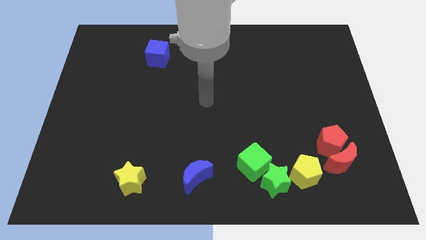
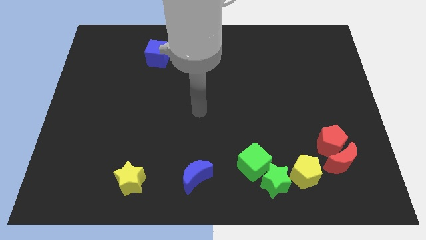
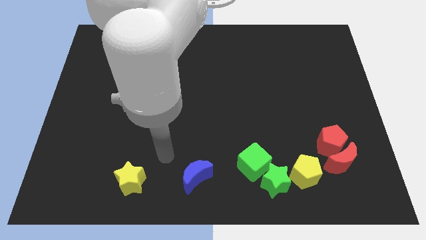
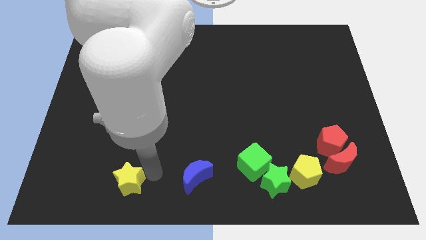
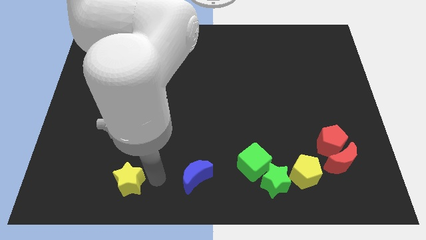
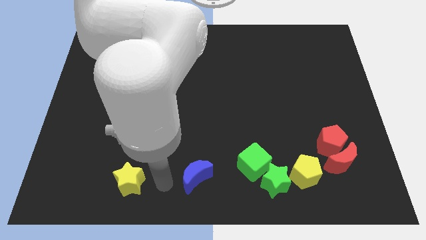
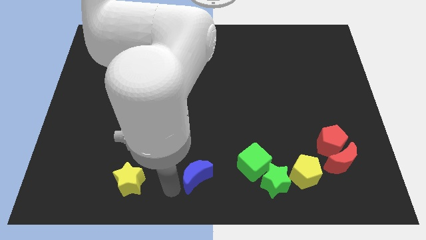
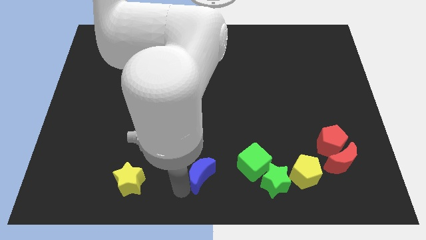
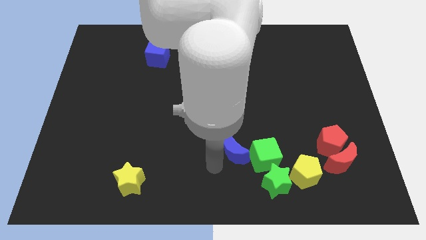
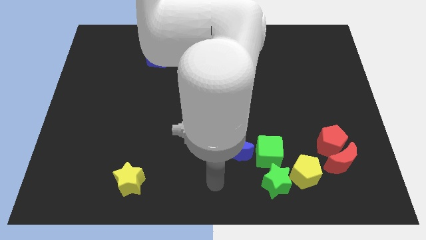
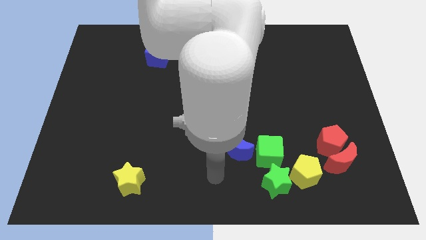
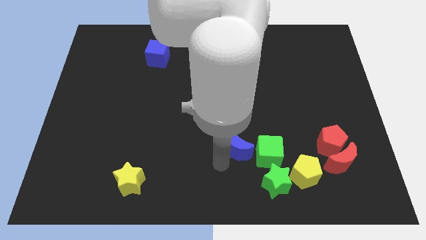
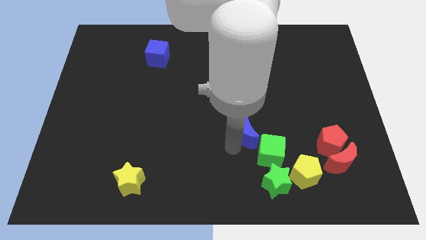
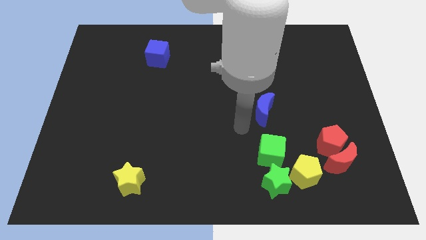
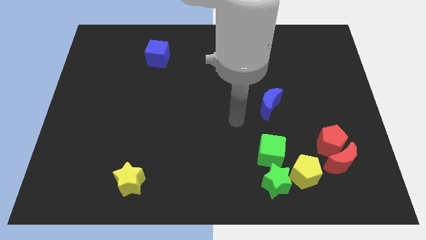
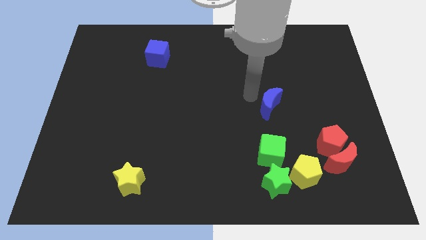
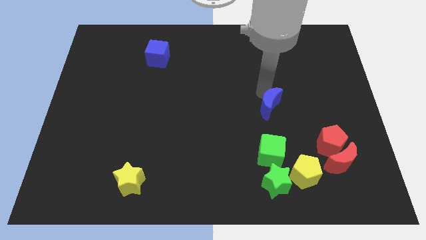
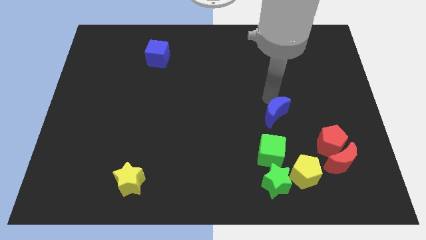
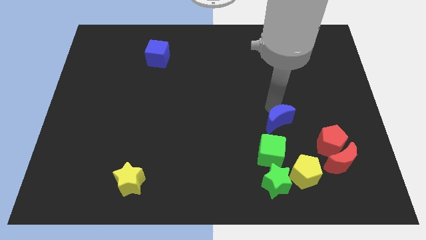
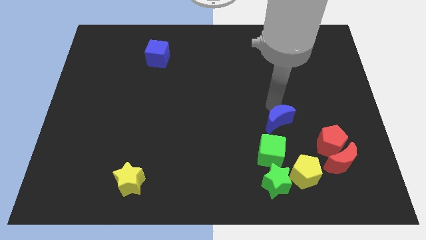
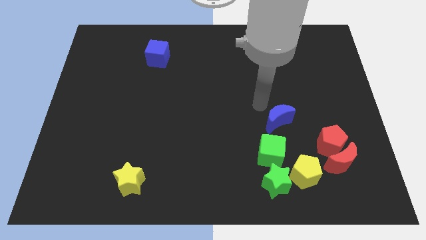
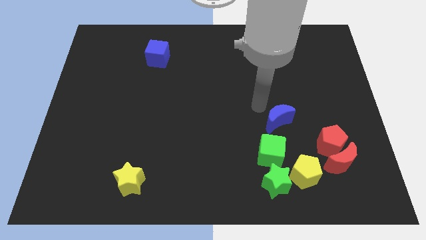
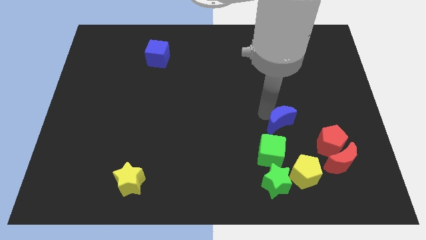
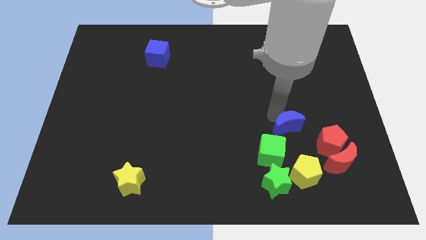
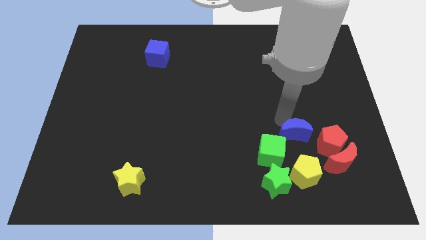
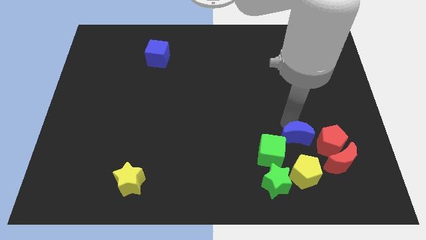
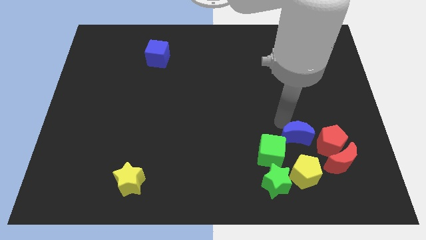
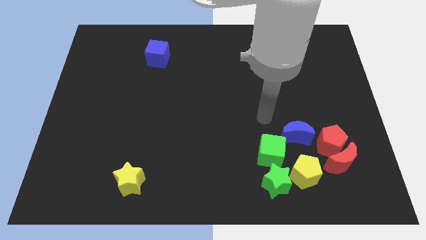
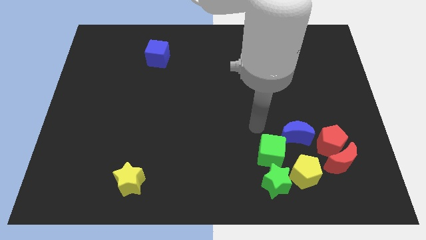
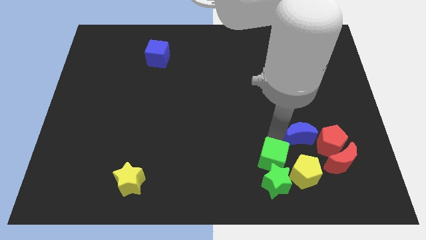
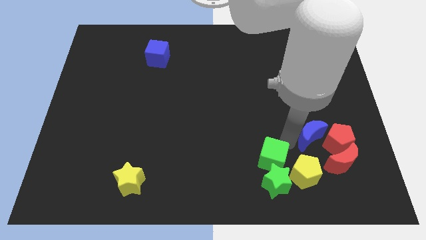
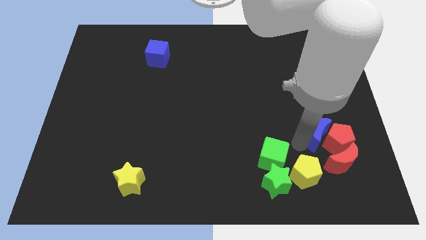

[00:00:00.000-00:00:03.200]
put the blue moon towards the red pentagon

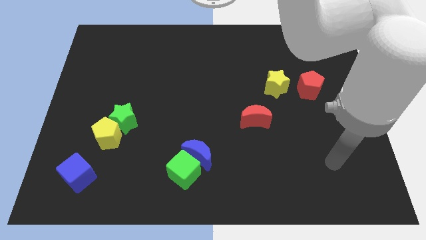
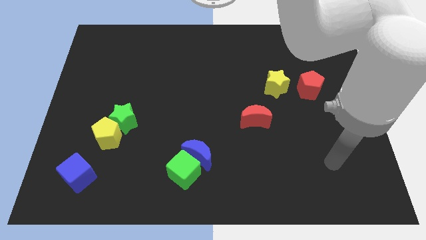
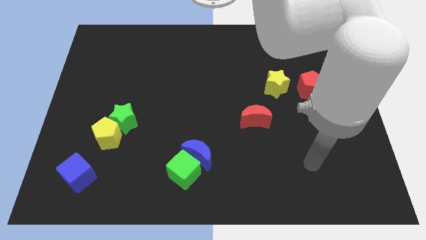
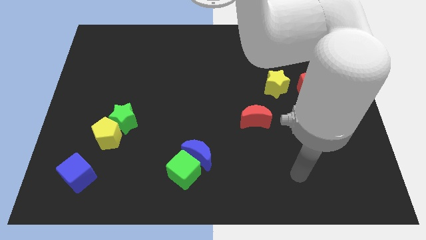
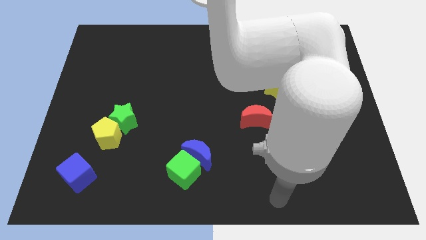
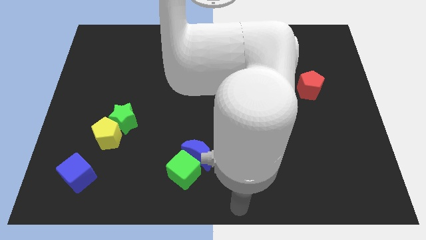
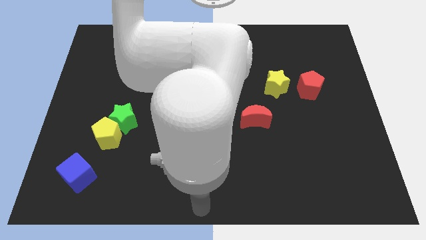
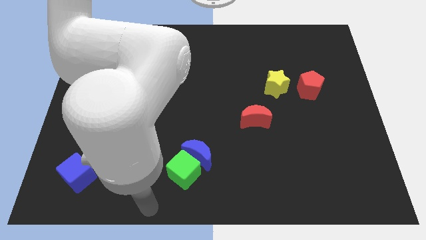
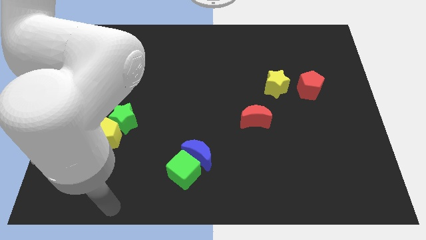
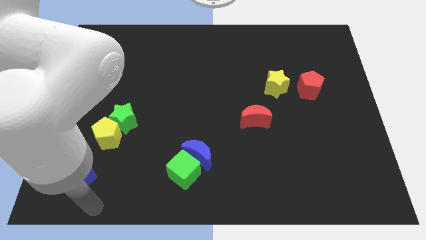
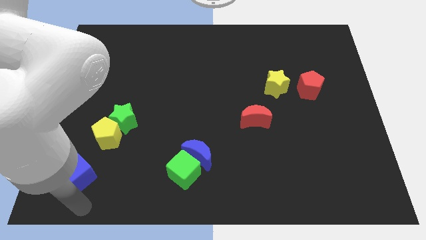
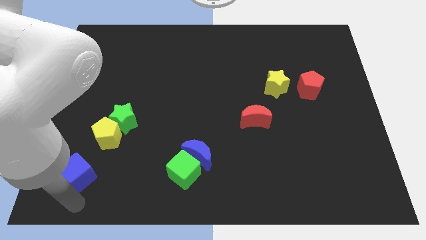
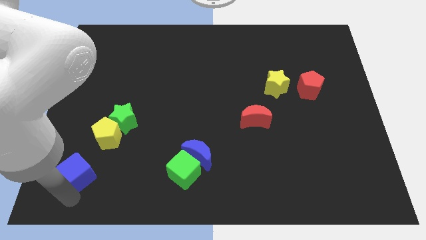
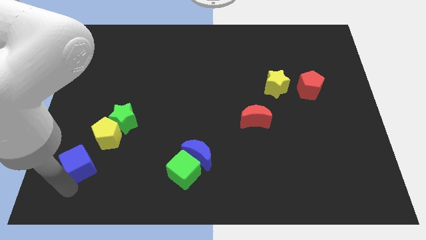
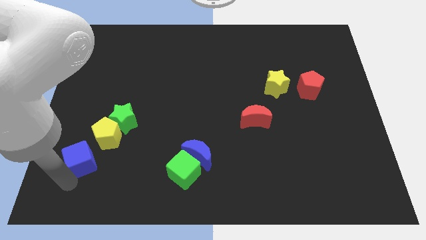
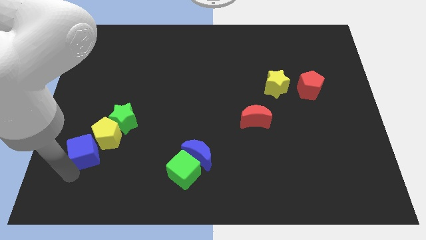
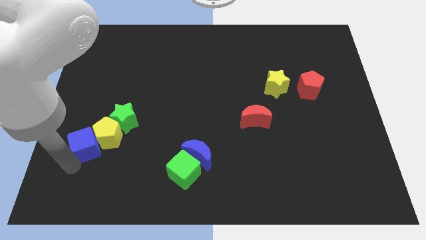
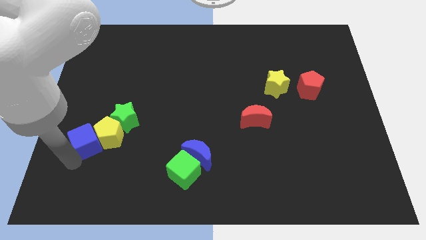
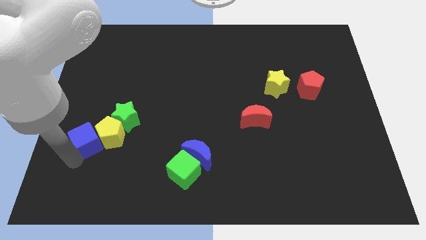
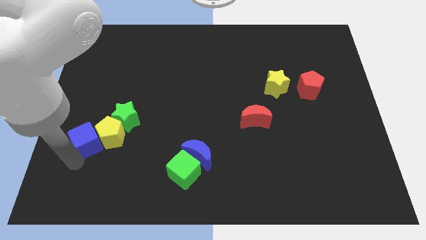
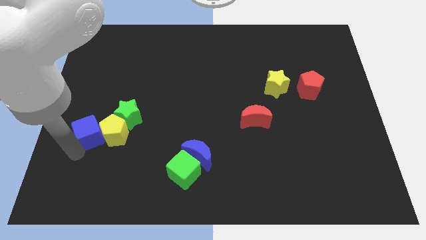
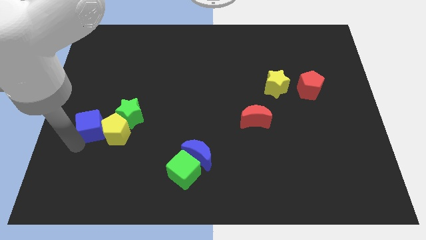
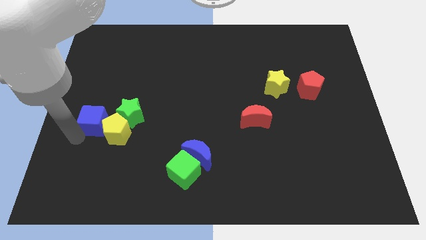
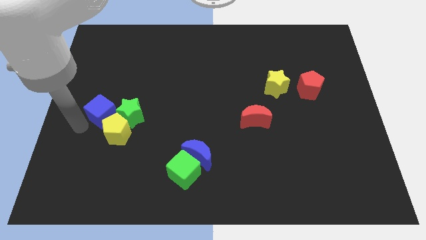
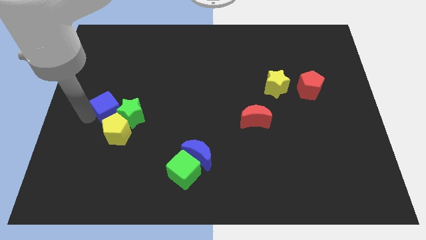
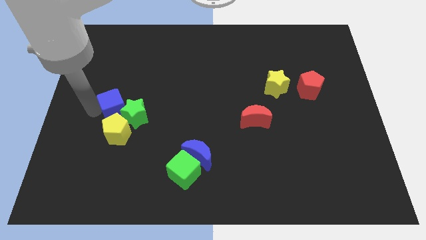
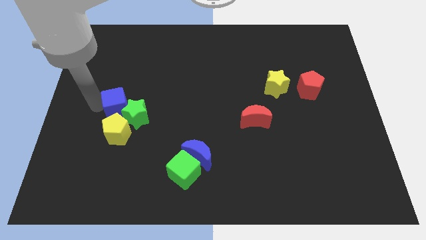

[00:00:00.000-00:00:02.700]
put the blue cube to the green star

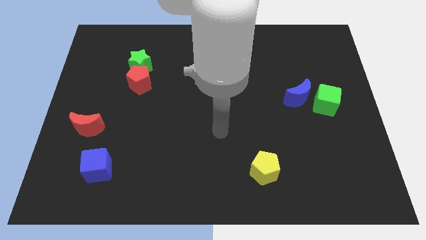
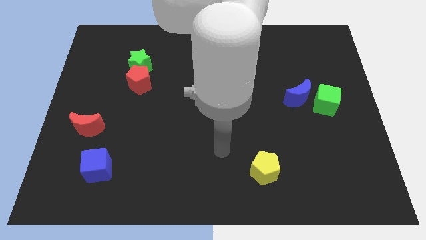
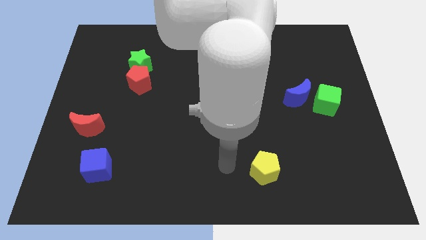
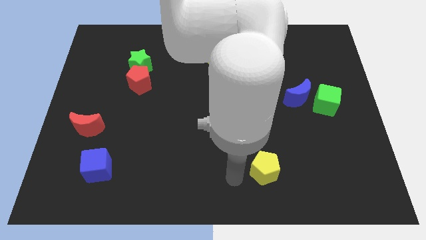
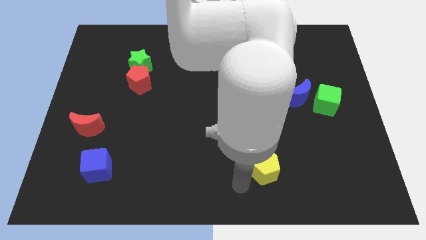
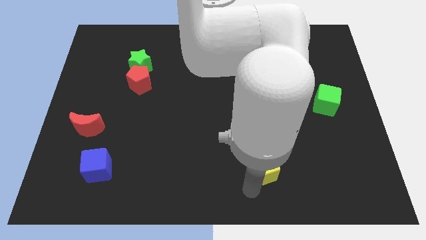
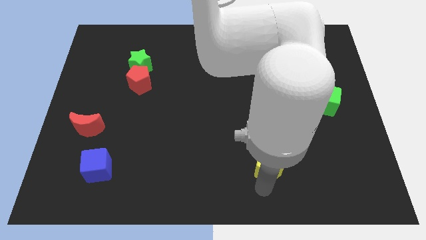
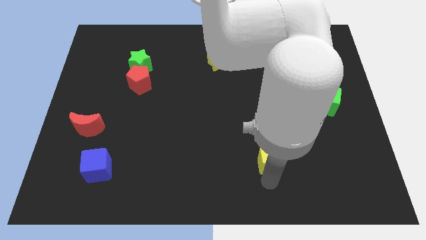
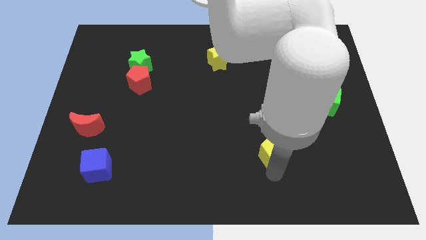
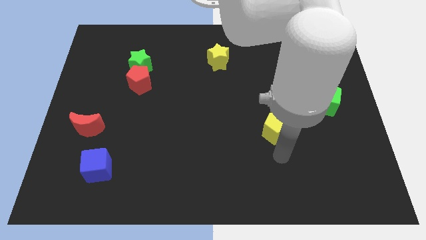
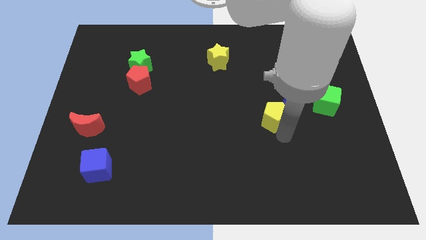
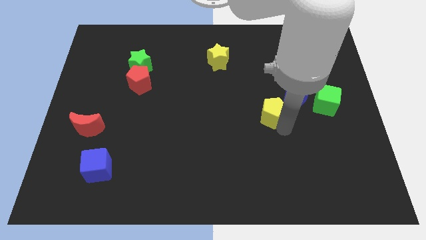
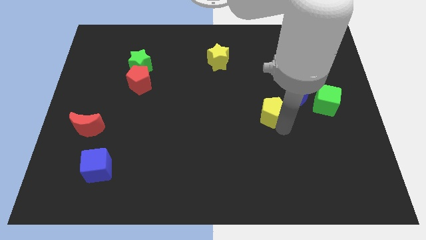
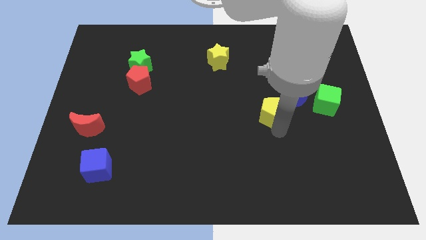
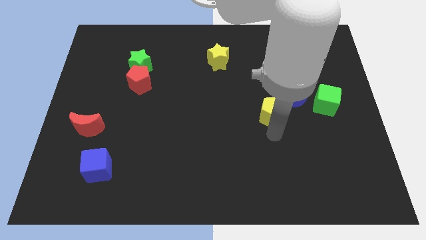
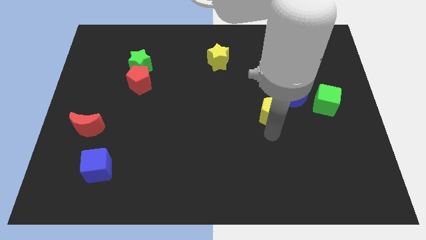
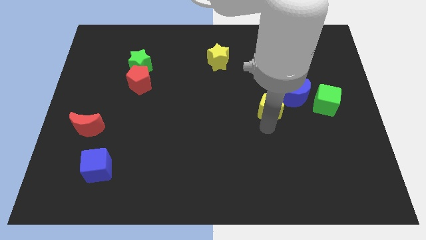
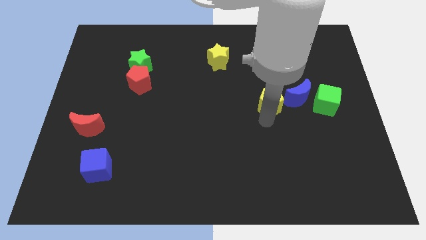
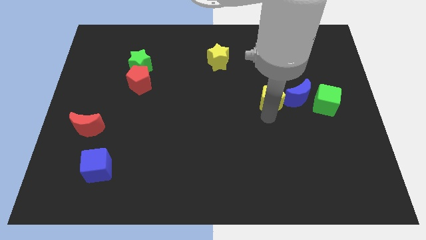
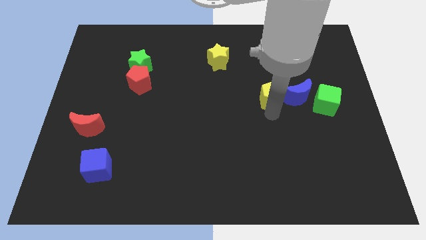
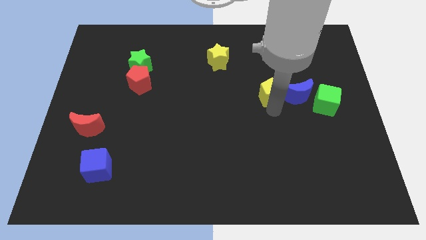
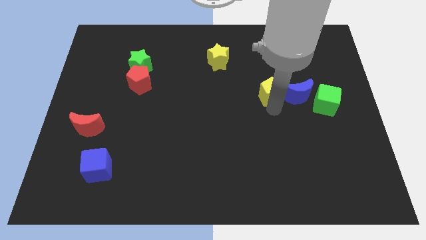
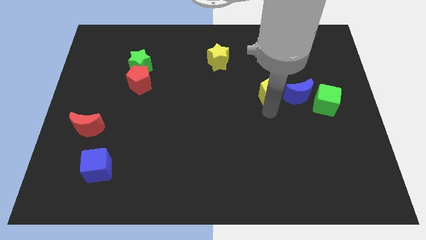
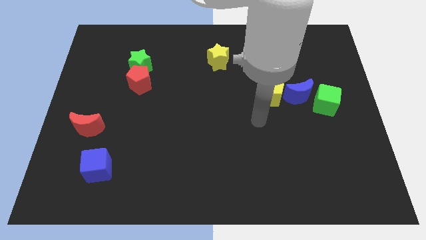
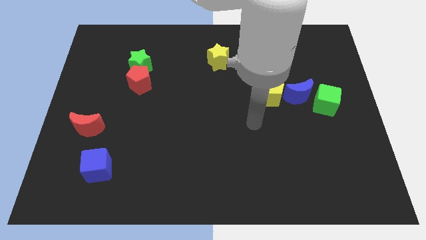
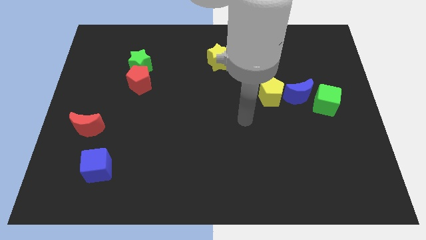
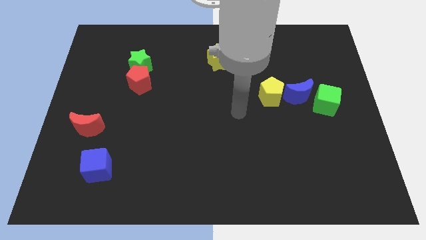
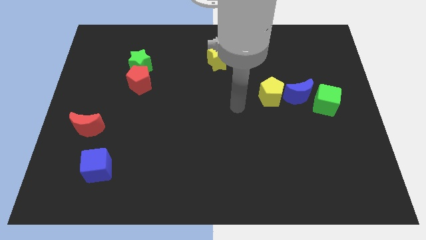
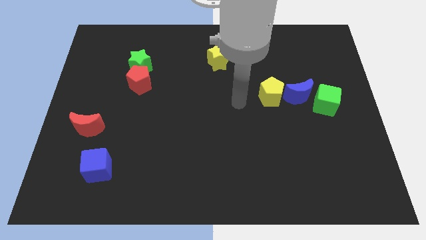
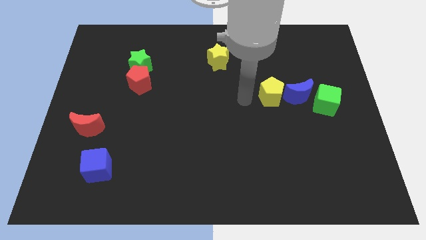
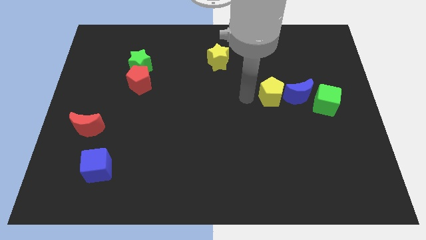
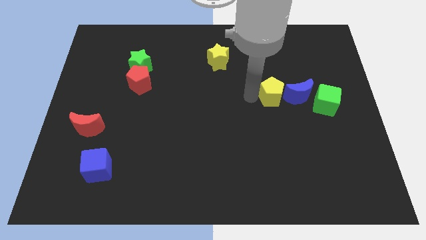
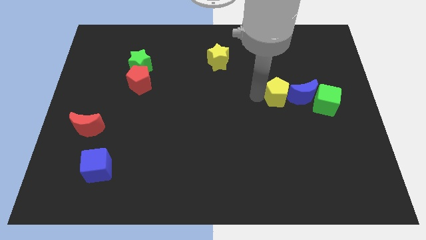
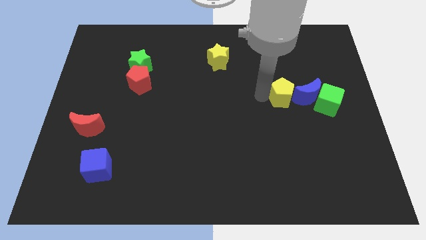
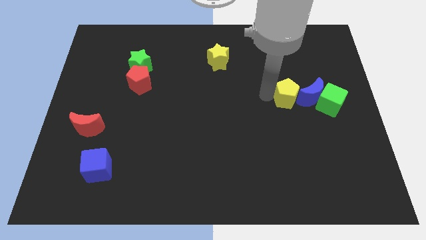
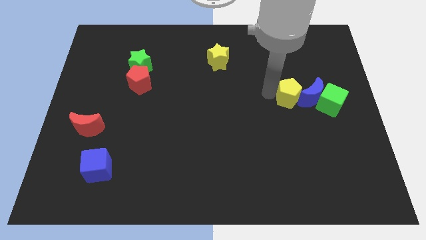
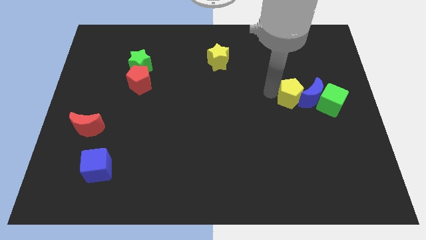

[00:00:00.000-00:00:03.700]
put the yellow pentagon next to the blue moon
